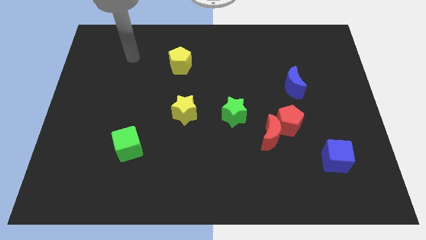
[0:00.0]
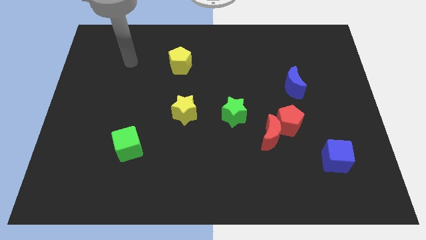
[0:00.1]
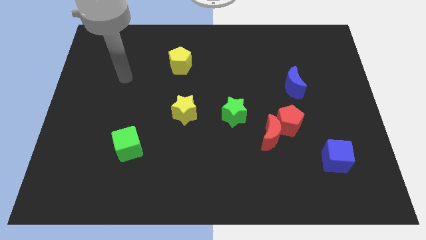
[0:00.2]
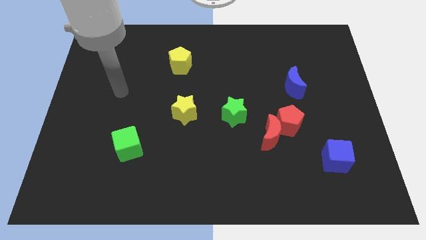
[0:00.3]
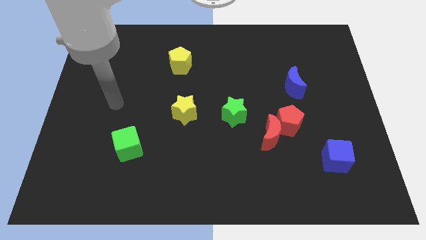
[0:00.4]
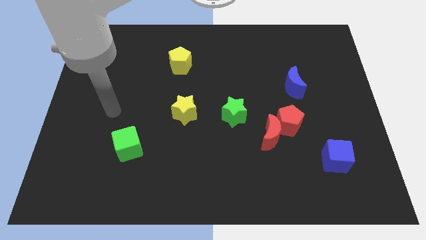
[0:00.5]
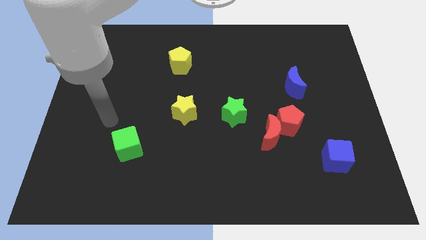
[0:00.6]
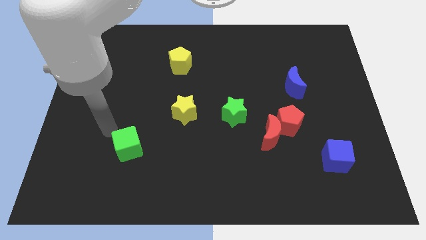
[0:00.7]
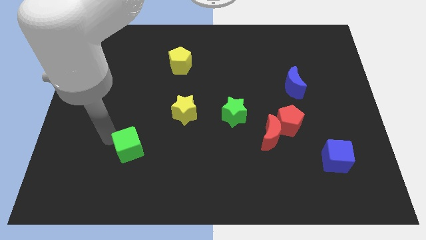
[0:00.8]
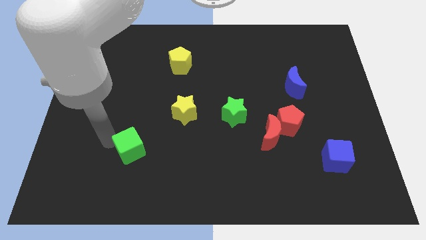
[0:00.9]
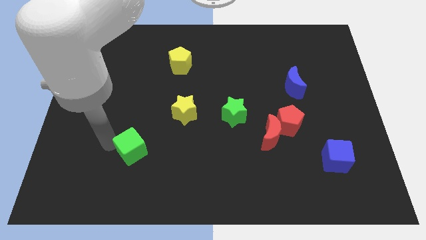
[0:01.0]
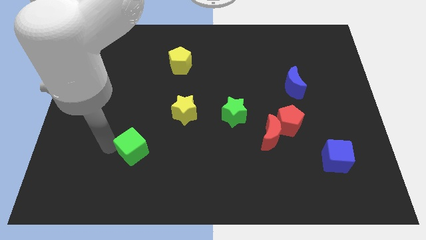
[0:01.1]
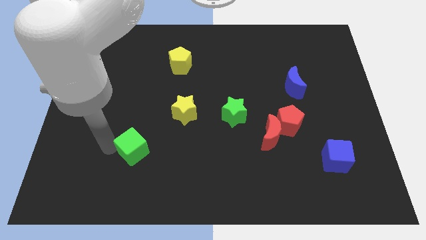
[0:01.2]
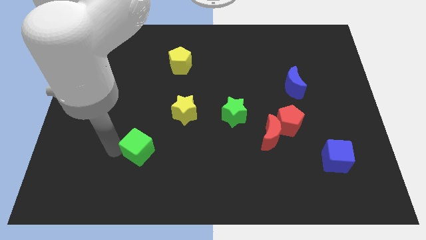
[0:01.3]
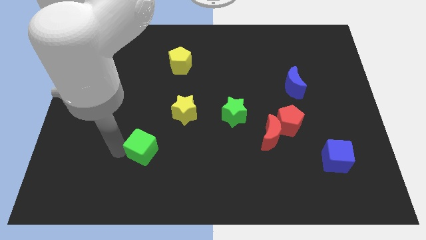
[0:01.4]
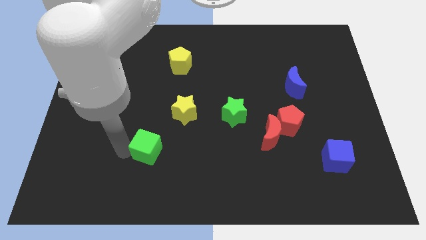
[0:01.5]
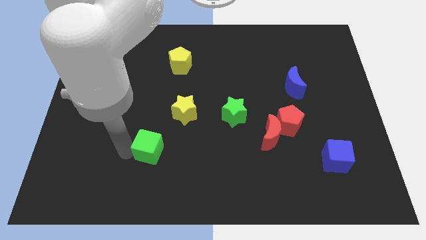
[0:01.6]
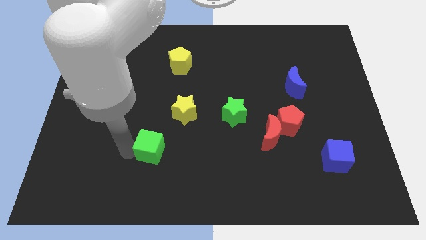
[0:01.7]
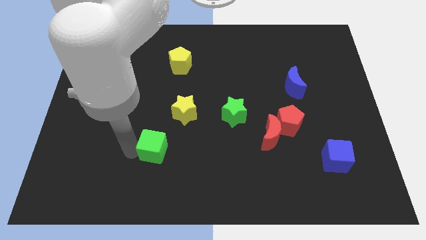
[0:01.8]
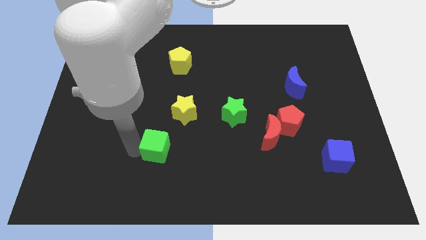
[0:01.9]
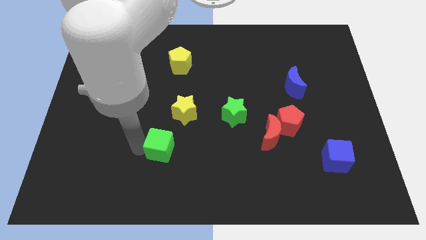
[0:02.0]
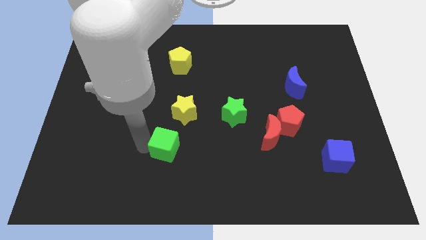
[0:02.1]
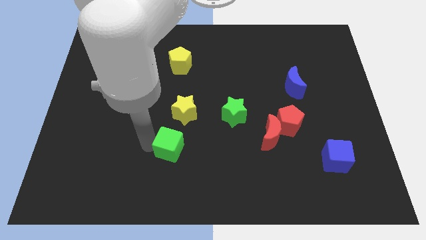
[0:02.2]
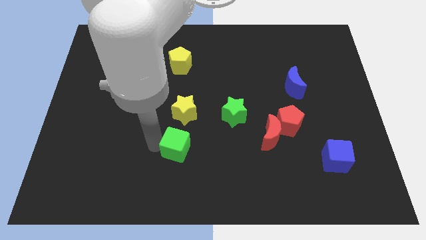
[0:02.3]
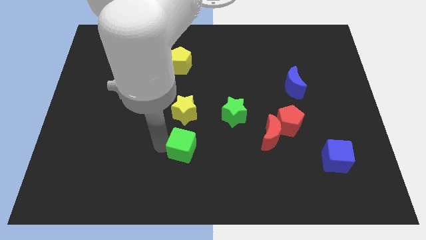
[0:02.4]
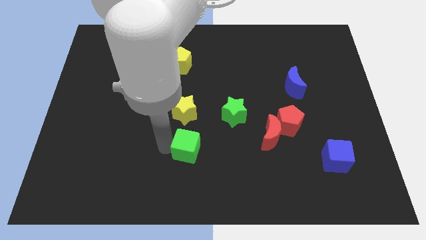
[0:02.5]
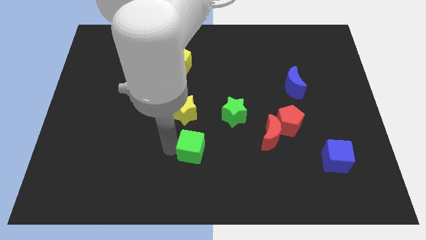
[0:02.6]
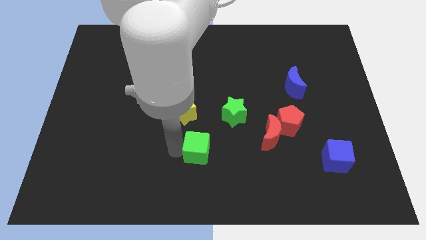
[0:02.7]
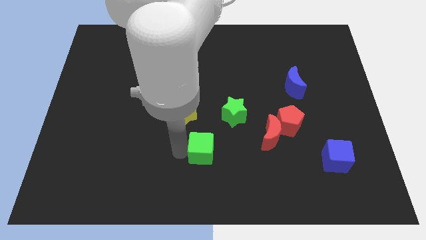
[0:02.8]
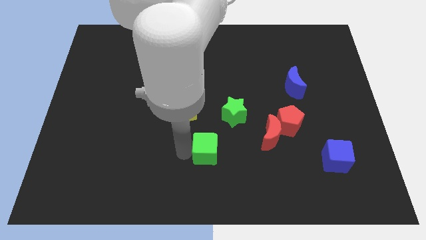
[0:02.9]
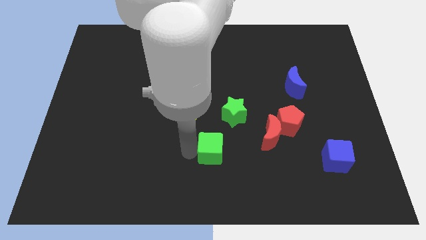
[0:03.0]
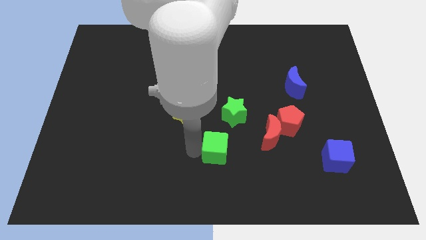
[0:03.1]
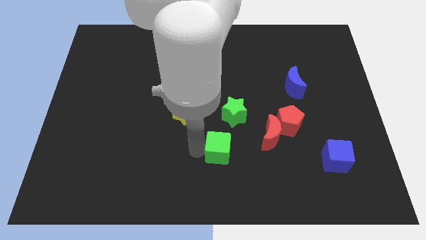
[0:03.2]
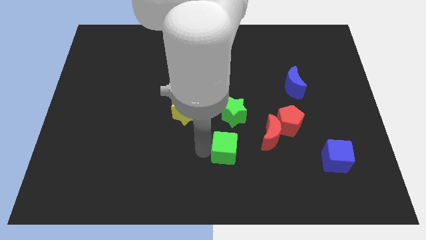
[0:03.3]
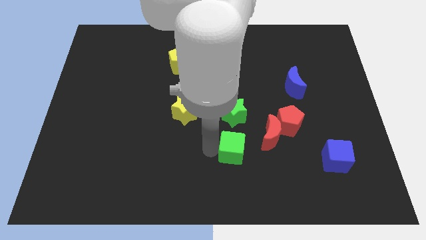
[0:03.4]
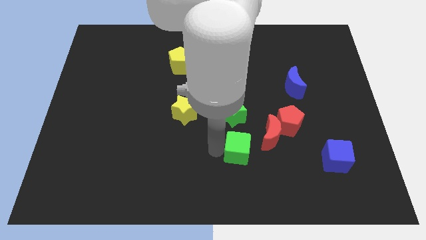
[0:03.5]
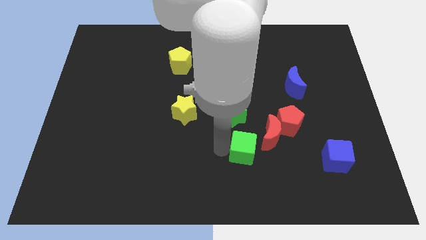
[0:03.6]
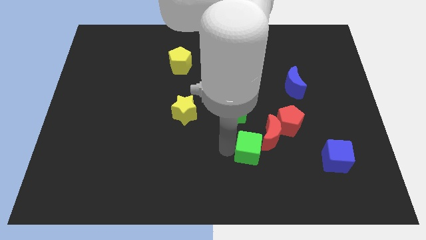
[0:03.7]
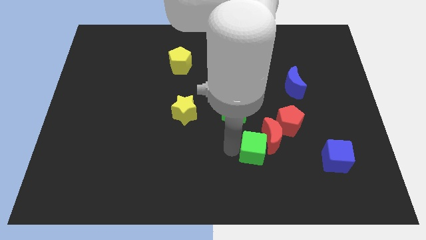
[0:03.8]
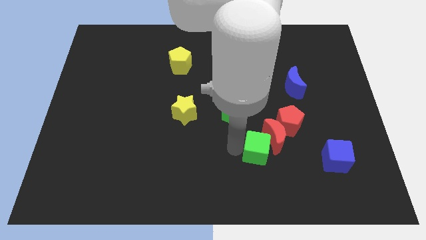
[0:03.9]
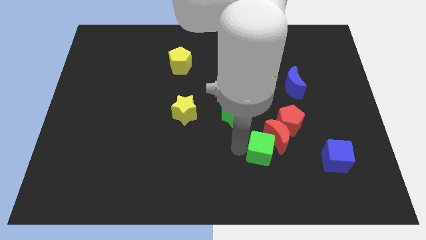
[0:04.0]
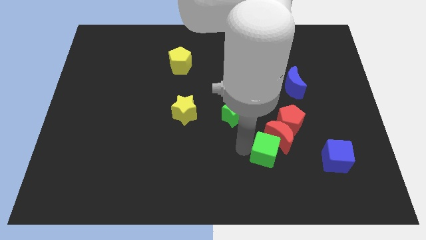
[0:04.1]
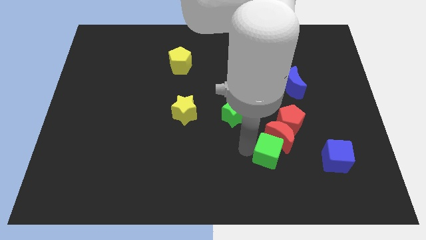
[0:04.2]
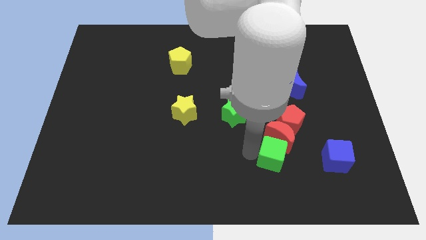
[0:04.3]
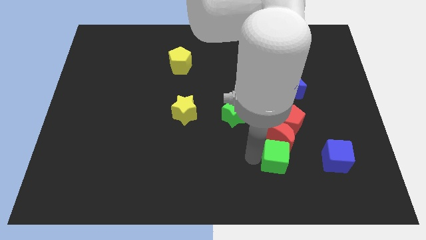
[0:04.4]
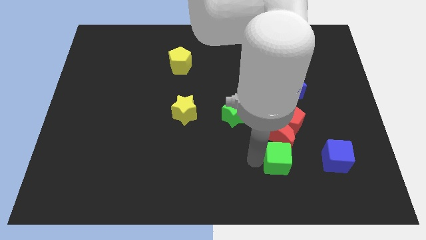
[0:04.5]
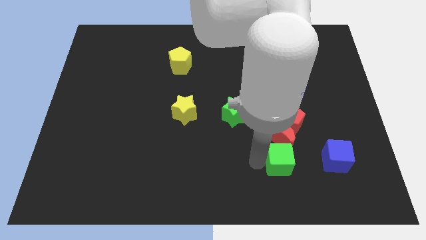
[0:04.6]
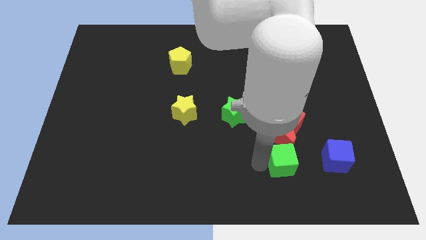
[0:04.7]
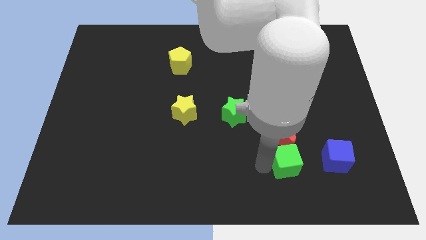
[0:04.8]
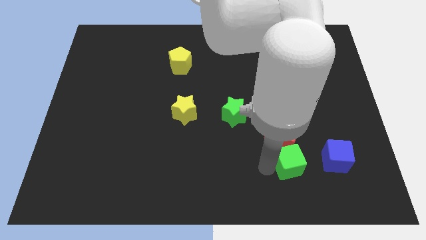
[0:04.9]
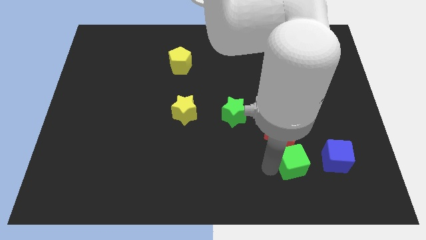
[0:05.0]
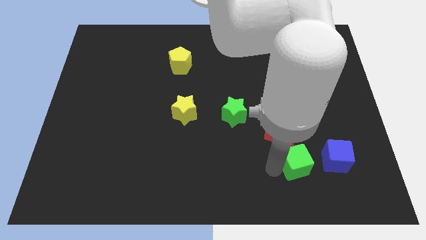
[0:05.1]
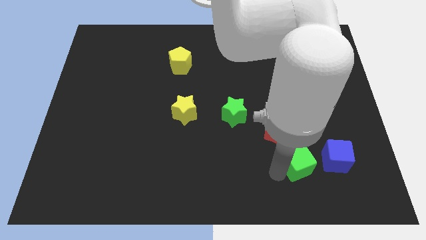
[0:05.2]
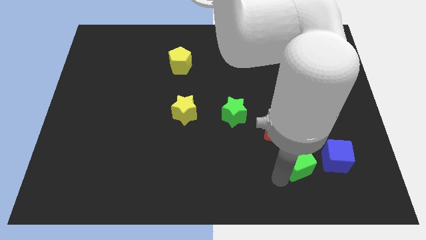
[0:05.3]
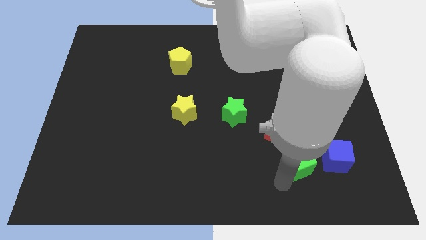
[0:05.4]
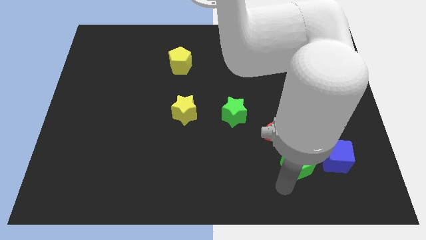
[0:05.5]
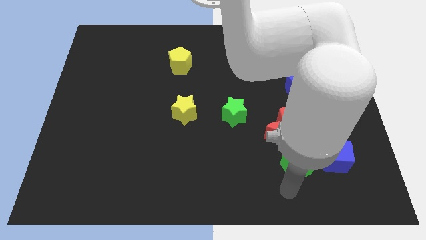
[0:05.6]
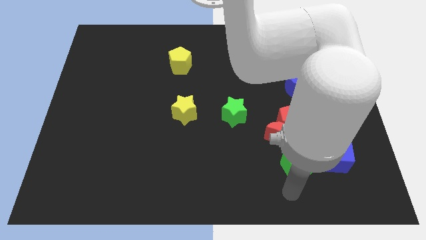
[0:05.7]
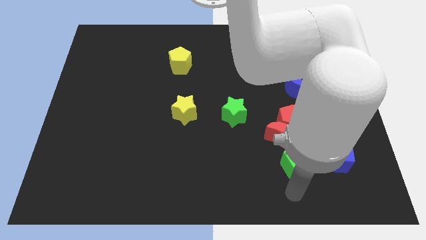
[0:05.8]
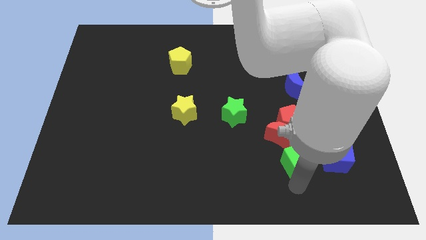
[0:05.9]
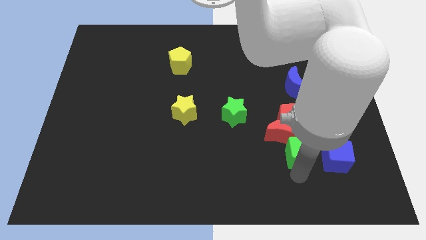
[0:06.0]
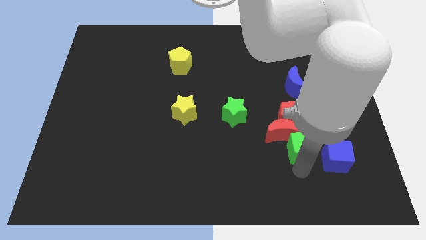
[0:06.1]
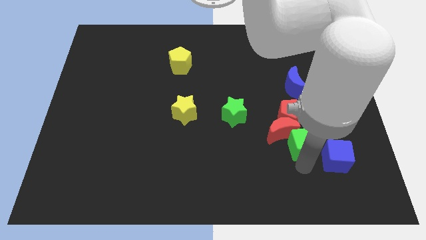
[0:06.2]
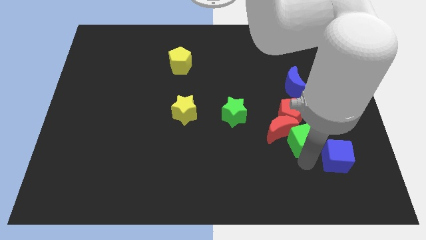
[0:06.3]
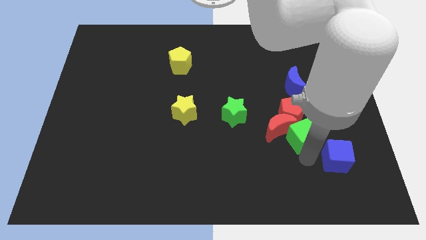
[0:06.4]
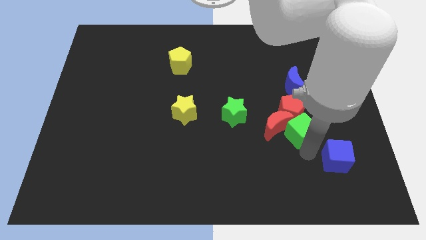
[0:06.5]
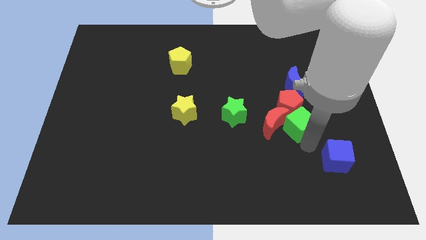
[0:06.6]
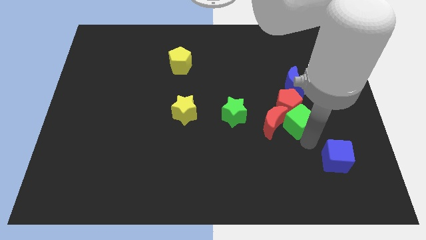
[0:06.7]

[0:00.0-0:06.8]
move the green cube next to the red pentagon

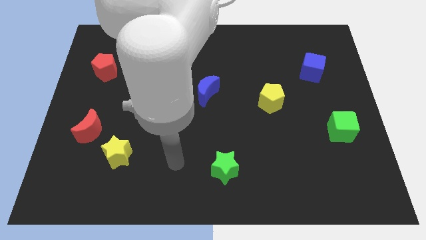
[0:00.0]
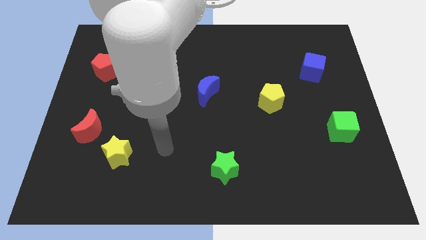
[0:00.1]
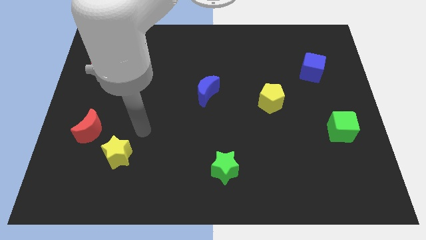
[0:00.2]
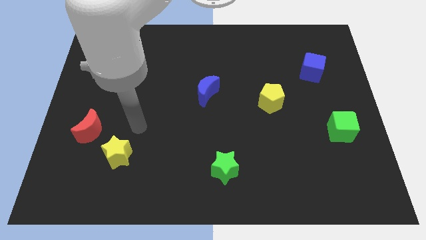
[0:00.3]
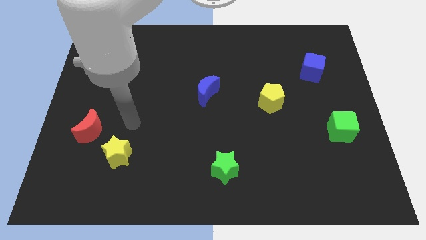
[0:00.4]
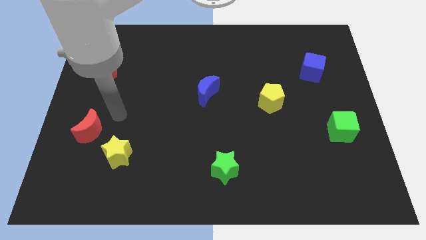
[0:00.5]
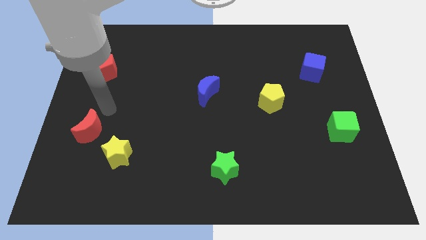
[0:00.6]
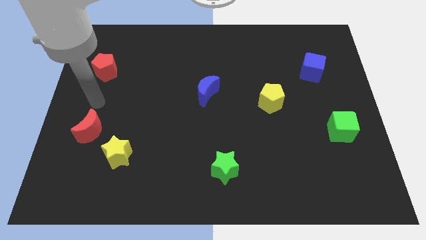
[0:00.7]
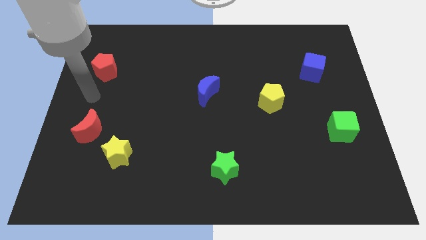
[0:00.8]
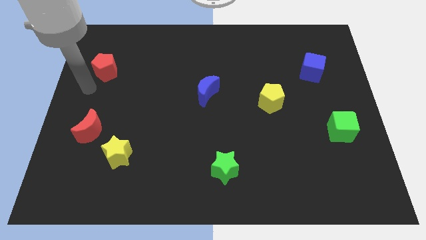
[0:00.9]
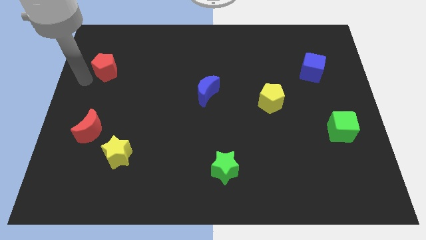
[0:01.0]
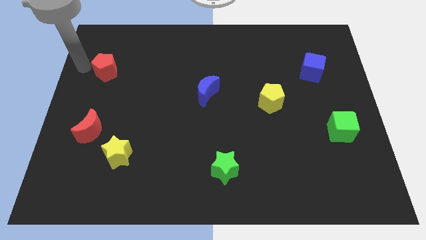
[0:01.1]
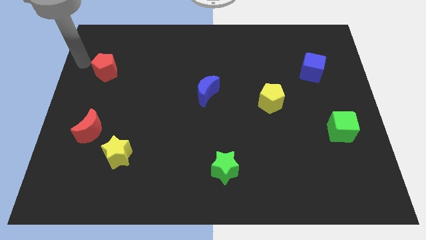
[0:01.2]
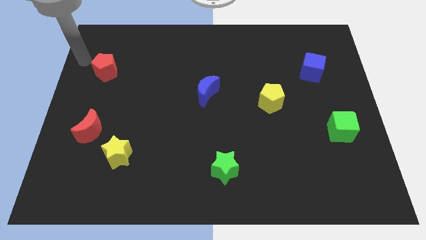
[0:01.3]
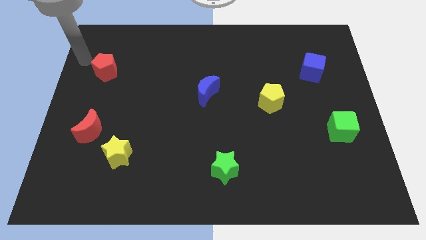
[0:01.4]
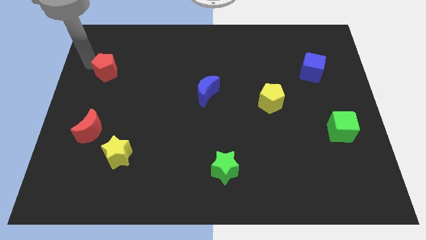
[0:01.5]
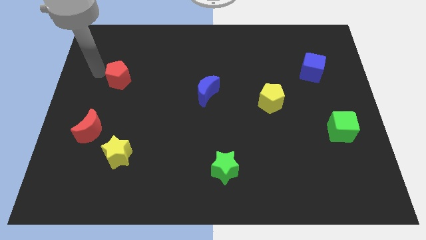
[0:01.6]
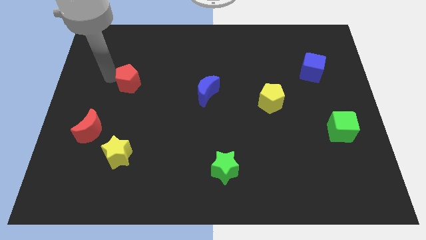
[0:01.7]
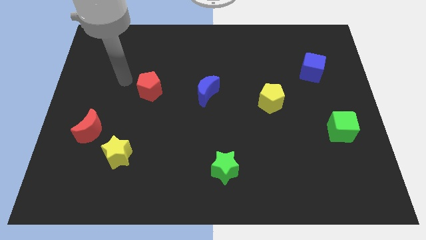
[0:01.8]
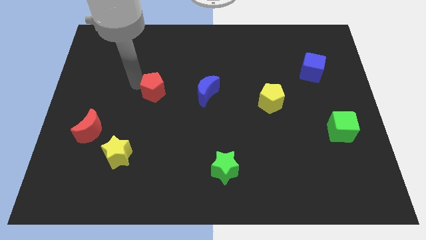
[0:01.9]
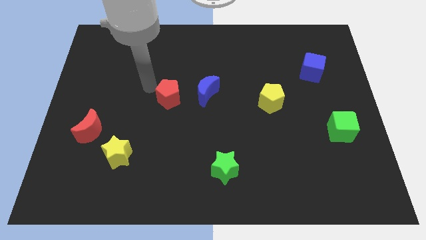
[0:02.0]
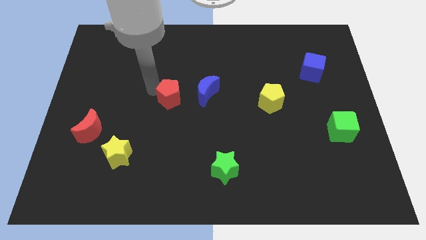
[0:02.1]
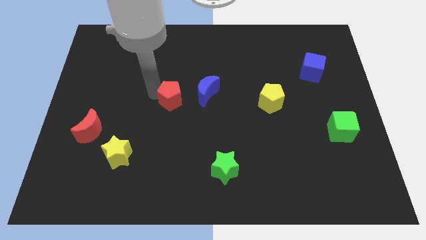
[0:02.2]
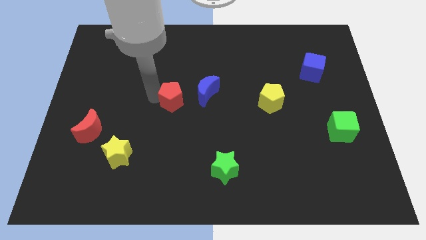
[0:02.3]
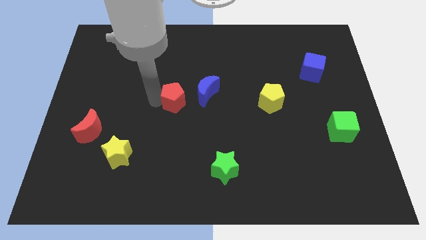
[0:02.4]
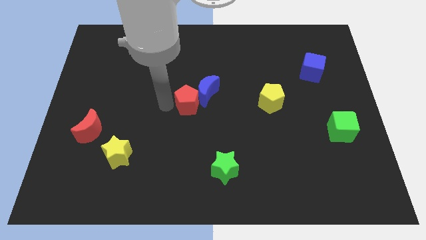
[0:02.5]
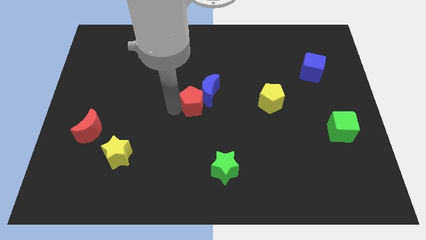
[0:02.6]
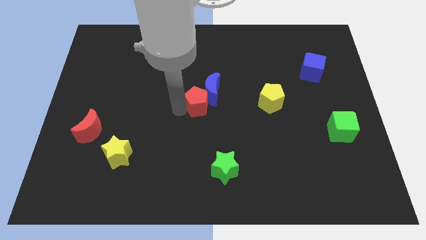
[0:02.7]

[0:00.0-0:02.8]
move the red pentagon close to the blue moon
